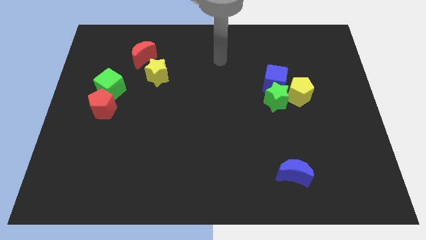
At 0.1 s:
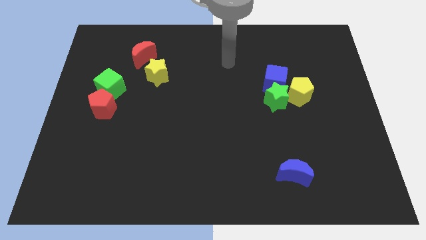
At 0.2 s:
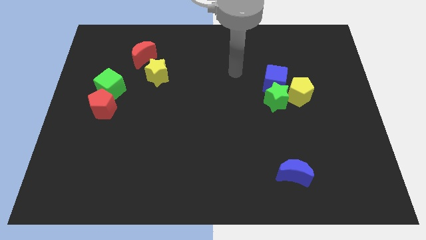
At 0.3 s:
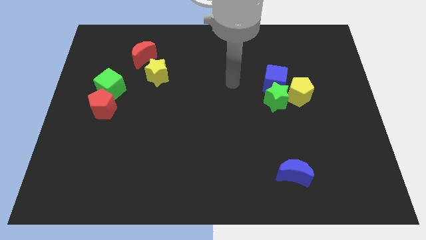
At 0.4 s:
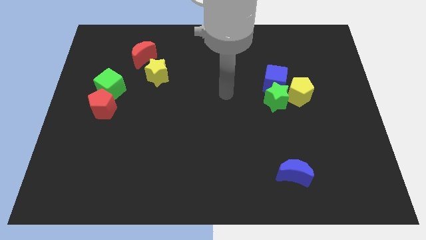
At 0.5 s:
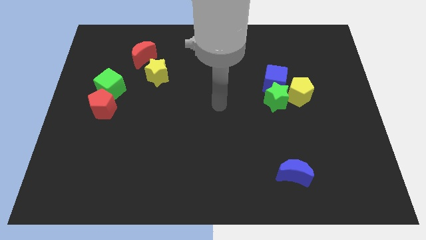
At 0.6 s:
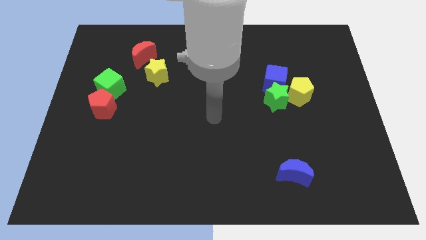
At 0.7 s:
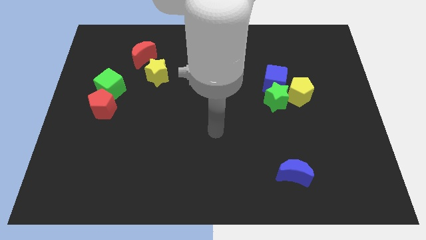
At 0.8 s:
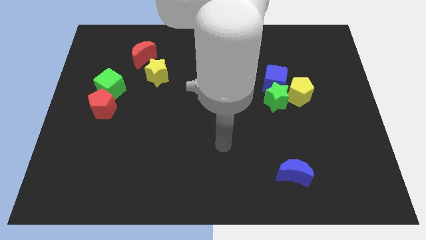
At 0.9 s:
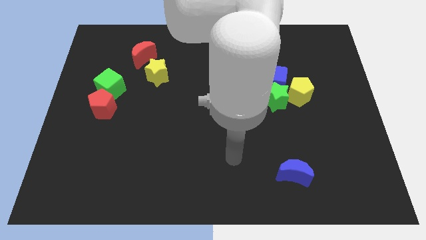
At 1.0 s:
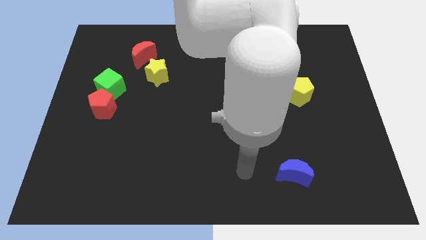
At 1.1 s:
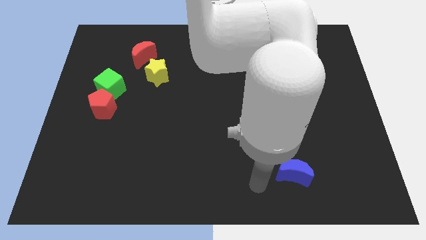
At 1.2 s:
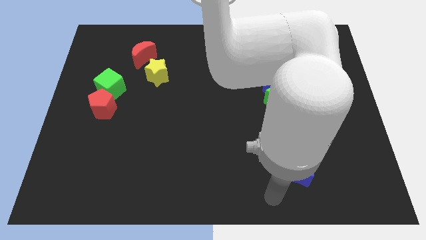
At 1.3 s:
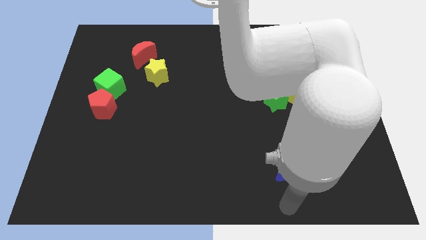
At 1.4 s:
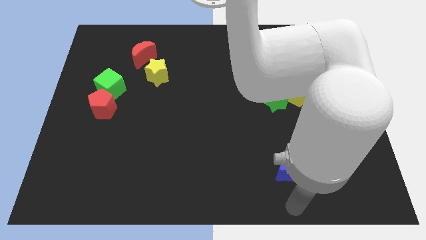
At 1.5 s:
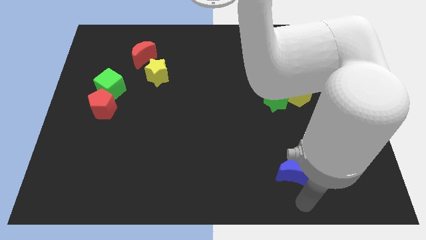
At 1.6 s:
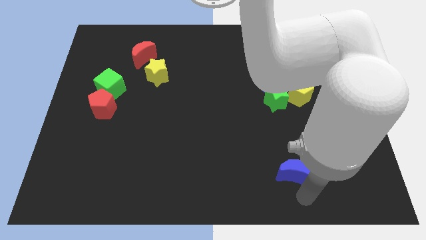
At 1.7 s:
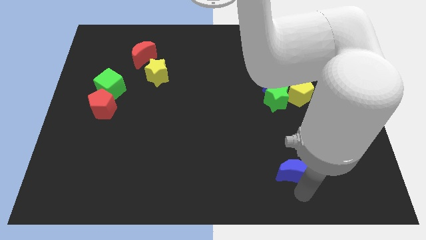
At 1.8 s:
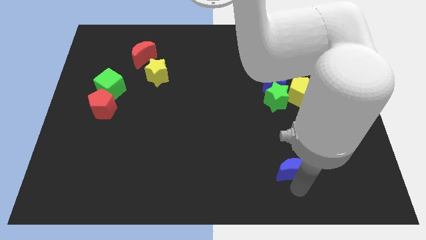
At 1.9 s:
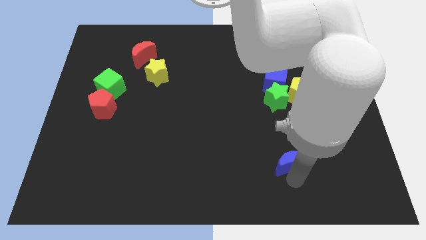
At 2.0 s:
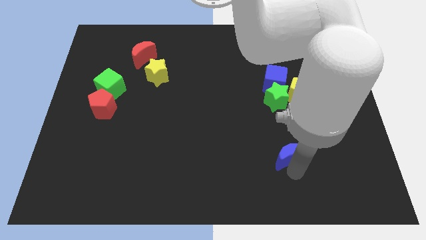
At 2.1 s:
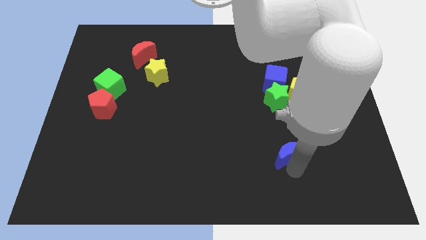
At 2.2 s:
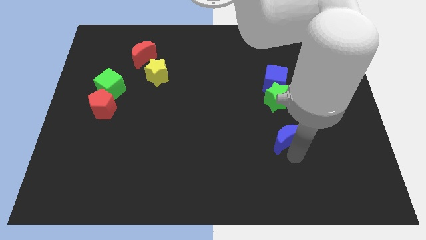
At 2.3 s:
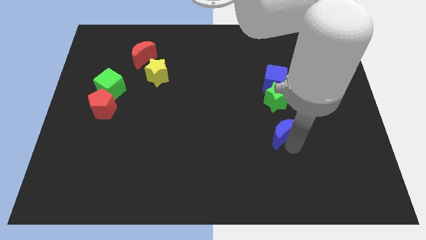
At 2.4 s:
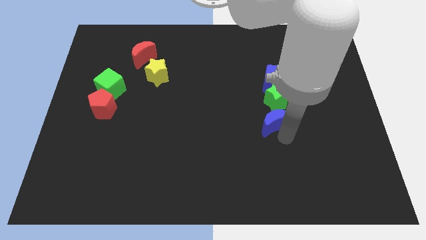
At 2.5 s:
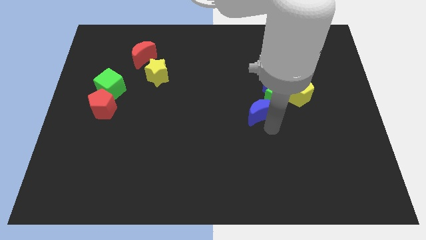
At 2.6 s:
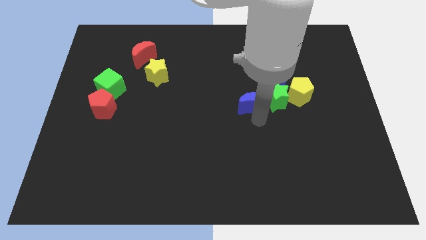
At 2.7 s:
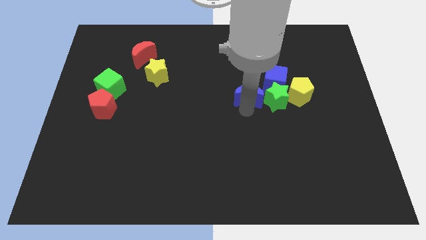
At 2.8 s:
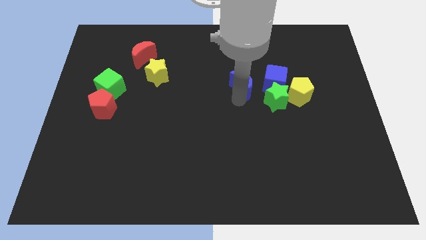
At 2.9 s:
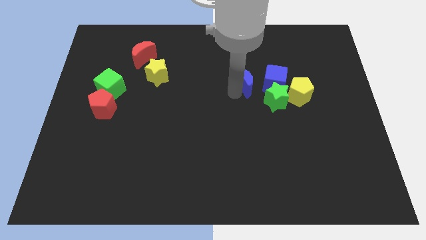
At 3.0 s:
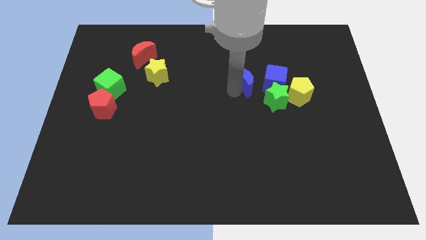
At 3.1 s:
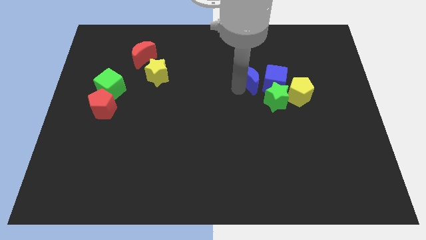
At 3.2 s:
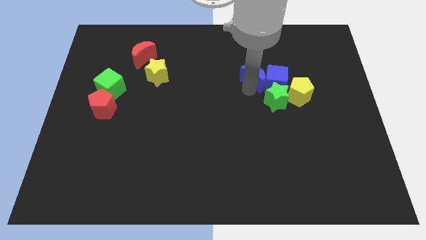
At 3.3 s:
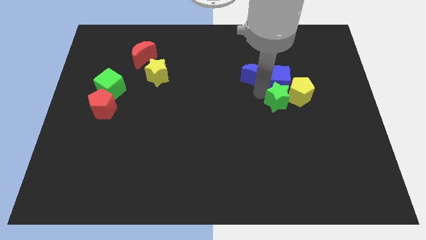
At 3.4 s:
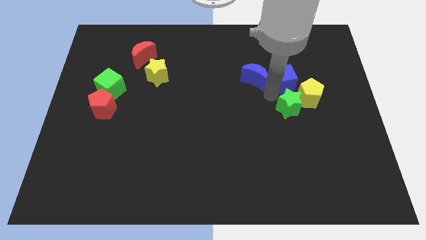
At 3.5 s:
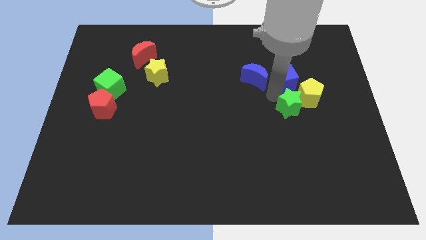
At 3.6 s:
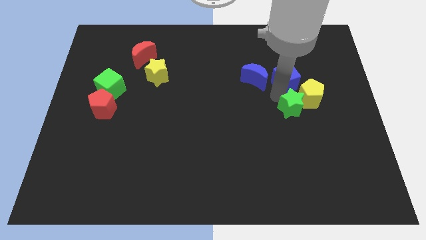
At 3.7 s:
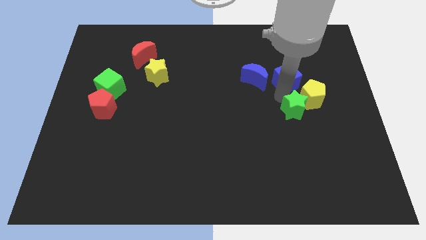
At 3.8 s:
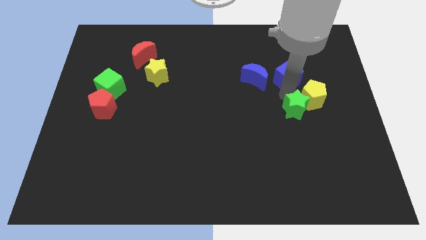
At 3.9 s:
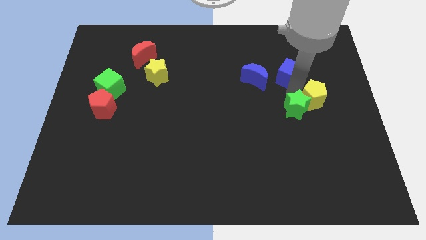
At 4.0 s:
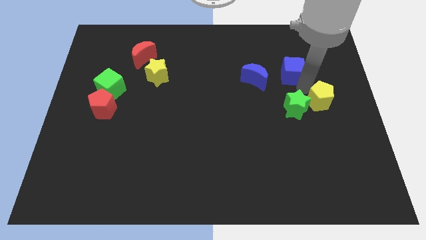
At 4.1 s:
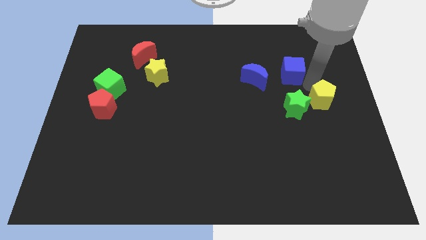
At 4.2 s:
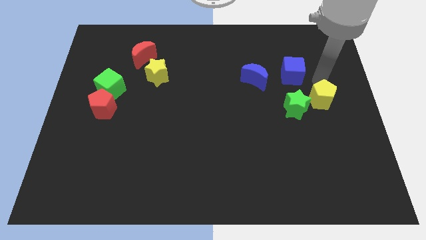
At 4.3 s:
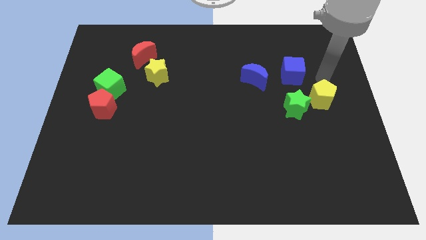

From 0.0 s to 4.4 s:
separate the blue cube and green star

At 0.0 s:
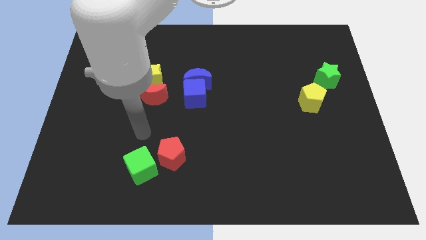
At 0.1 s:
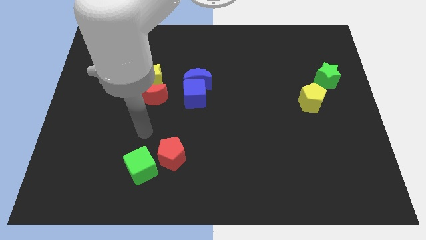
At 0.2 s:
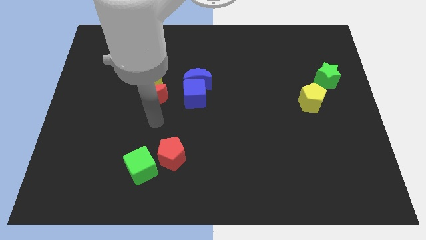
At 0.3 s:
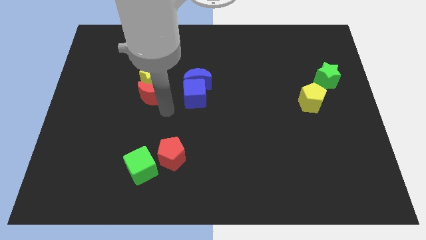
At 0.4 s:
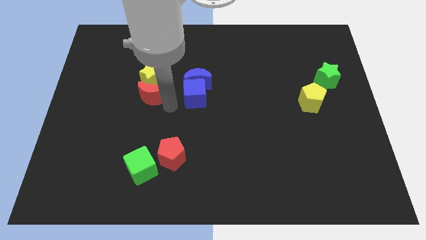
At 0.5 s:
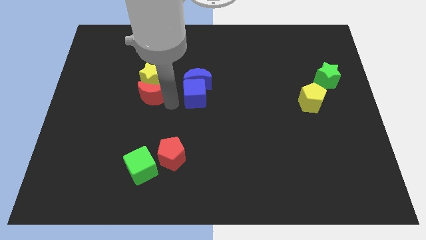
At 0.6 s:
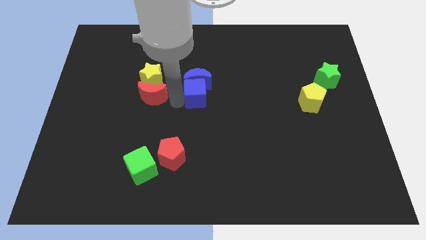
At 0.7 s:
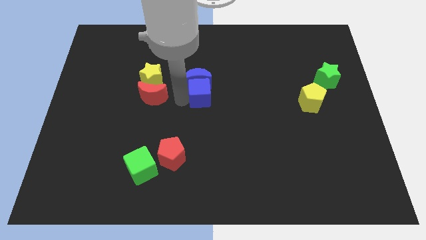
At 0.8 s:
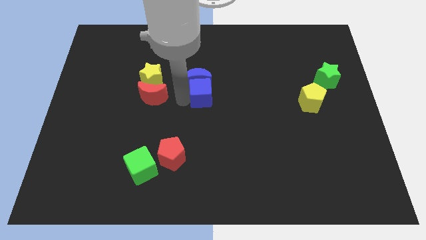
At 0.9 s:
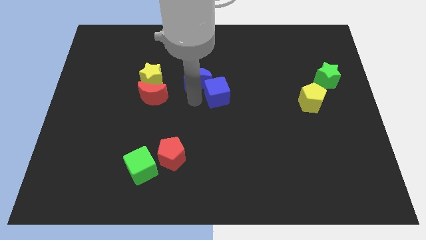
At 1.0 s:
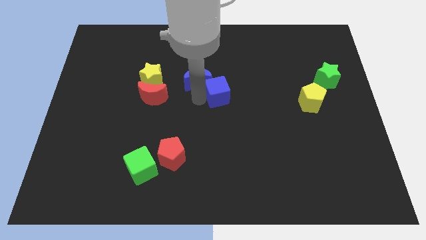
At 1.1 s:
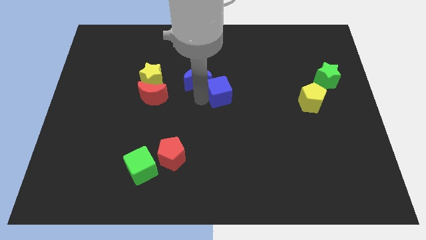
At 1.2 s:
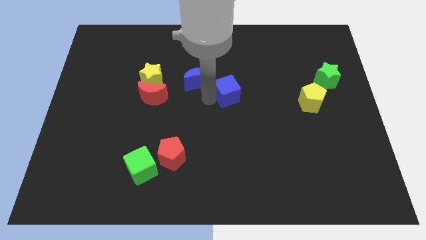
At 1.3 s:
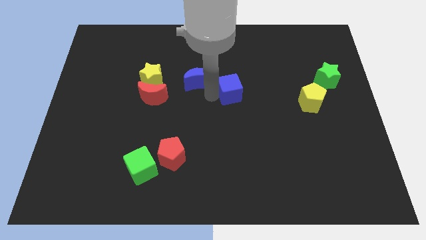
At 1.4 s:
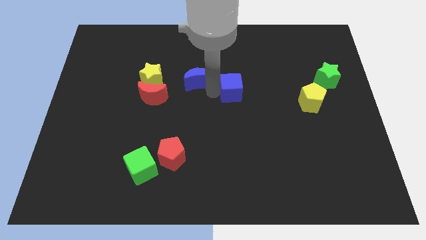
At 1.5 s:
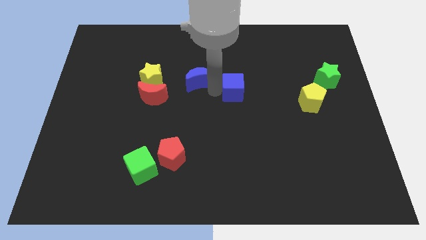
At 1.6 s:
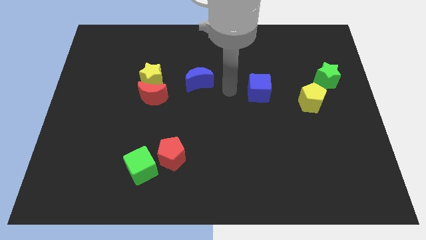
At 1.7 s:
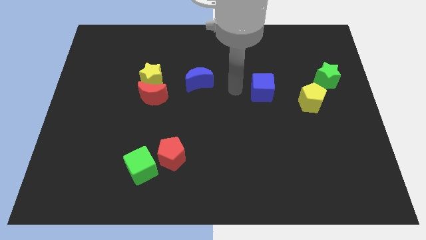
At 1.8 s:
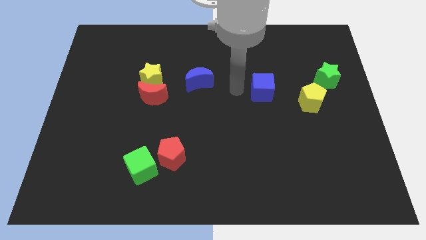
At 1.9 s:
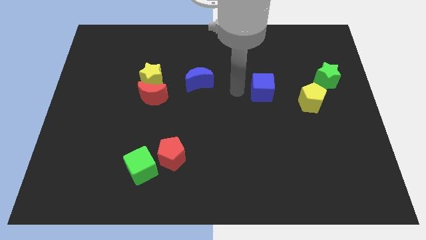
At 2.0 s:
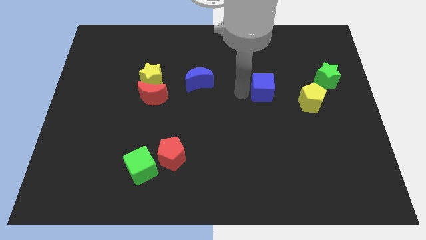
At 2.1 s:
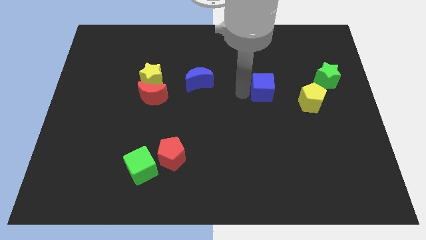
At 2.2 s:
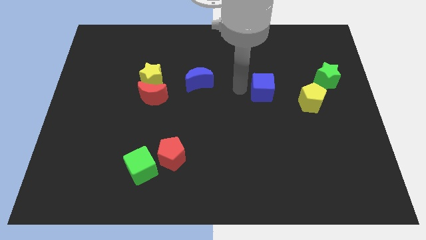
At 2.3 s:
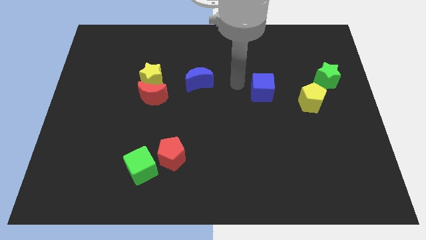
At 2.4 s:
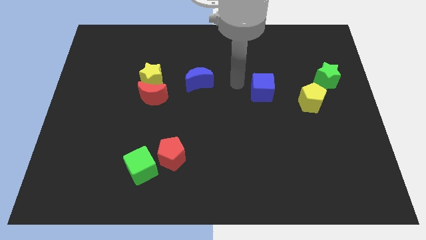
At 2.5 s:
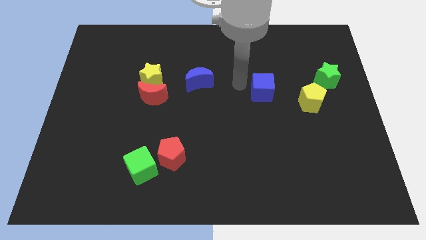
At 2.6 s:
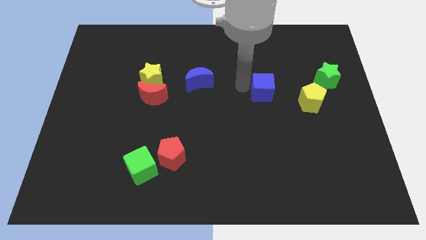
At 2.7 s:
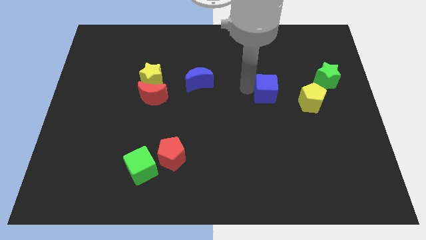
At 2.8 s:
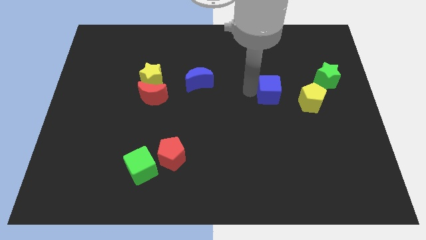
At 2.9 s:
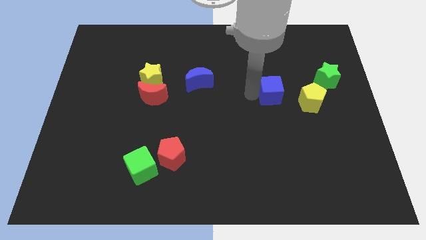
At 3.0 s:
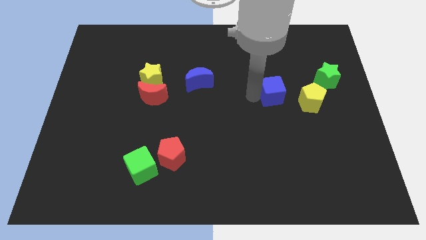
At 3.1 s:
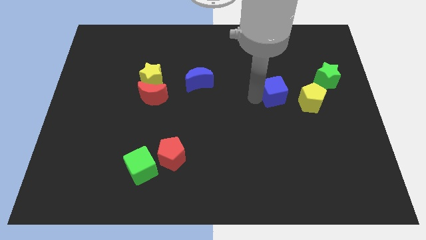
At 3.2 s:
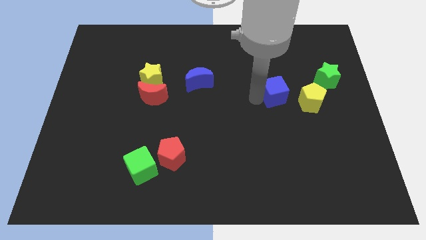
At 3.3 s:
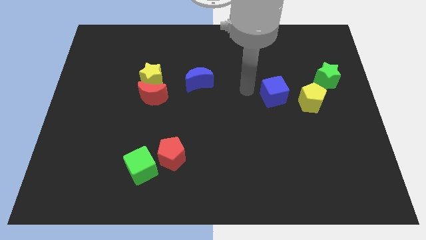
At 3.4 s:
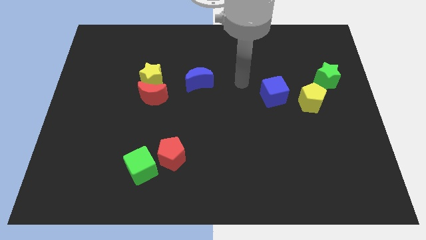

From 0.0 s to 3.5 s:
place the blue cube left to the yellow pentagon

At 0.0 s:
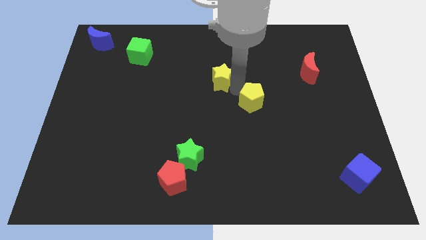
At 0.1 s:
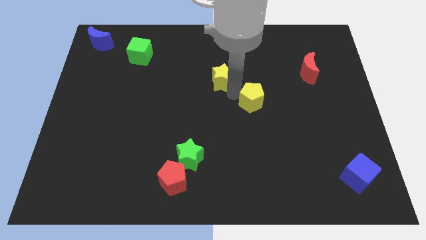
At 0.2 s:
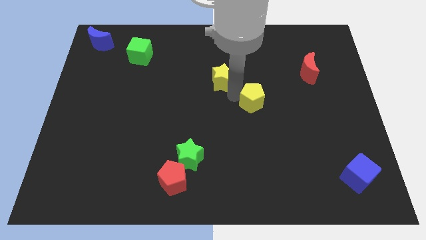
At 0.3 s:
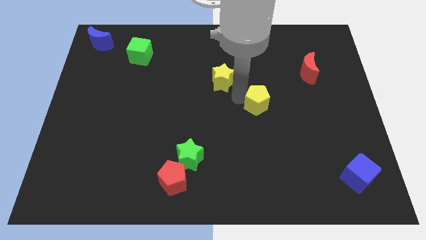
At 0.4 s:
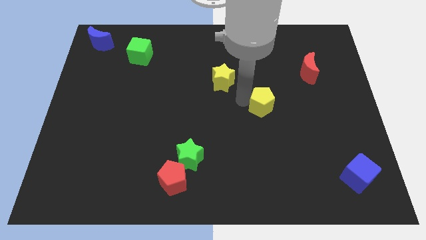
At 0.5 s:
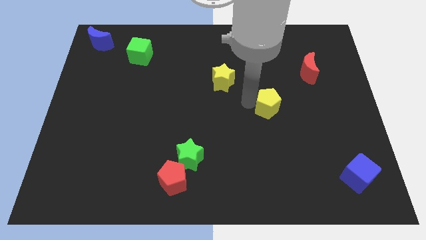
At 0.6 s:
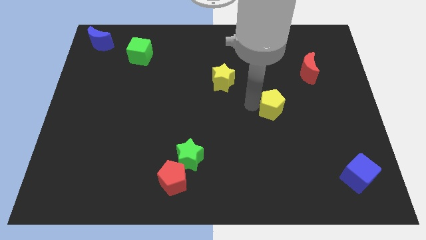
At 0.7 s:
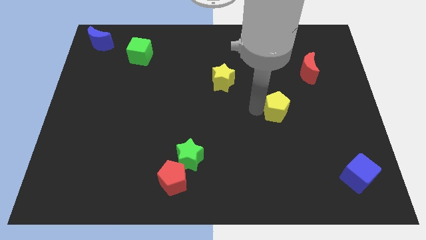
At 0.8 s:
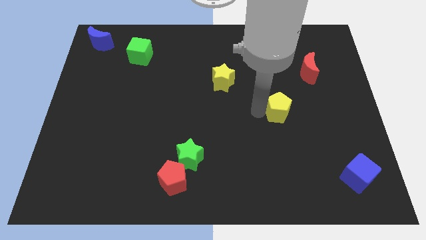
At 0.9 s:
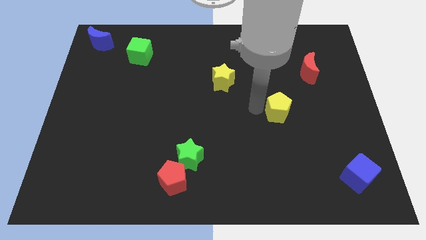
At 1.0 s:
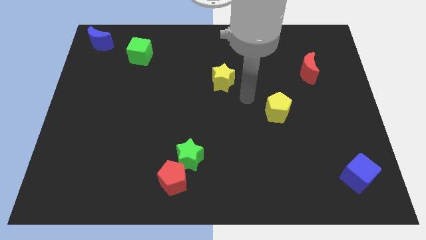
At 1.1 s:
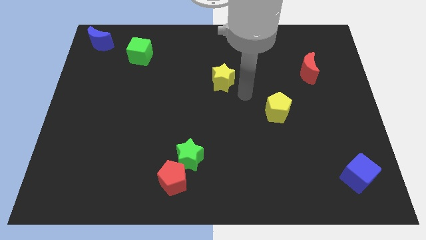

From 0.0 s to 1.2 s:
separate yellow pentagon from yellow star
